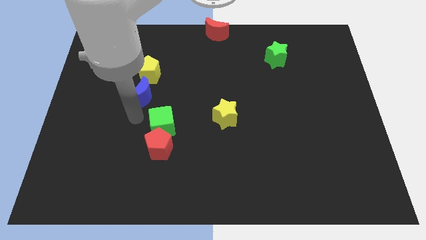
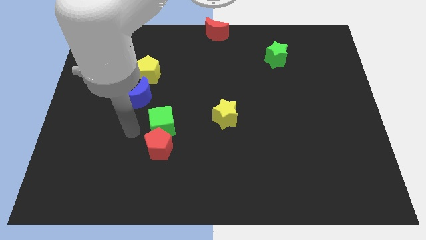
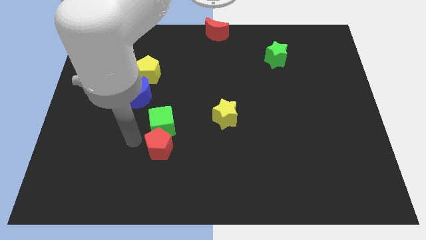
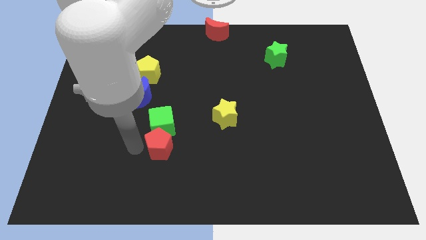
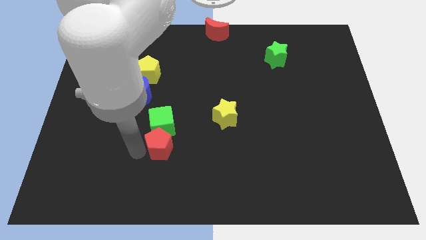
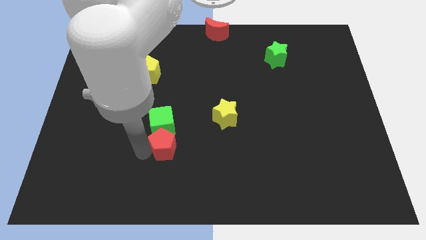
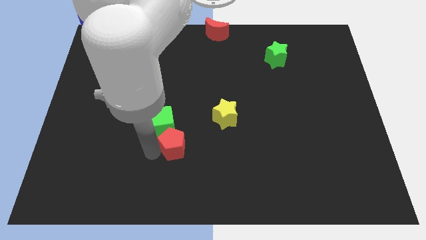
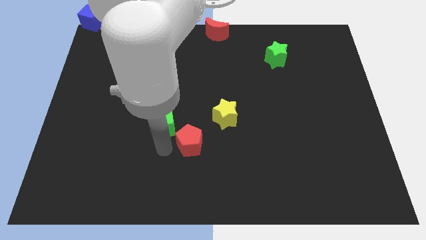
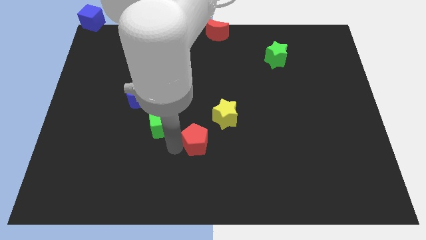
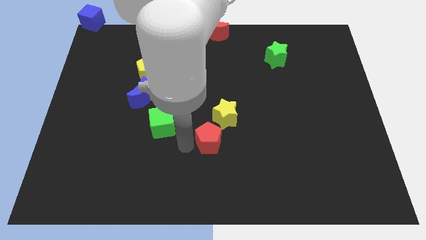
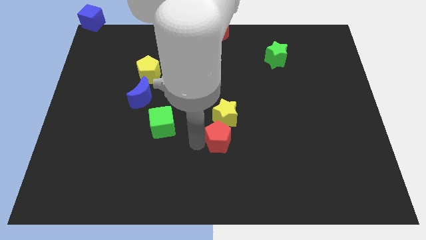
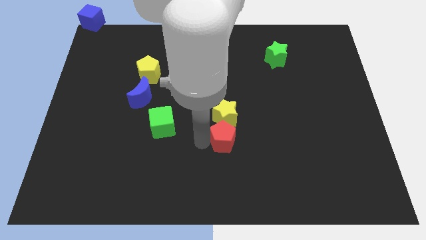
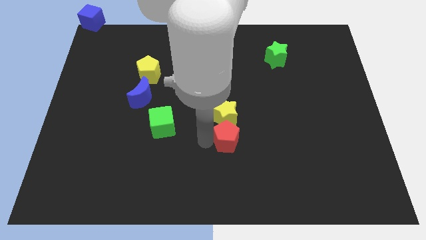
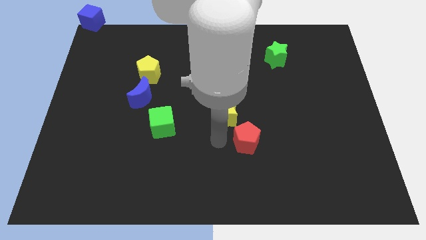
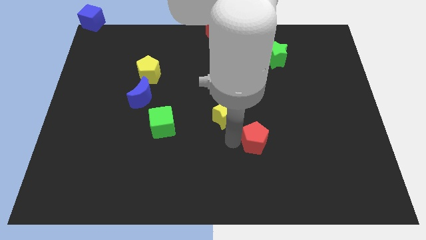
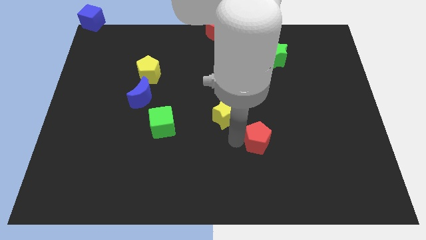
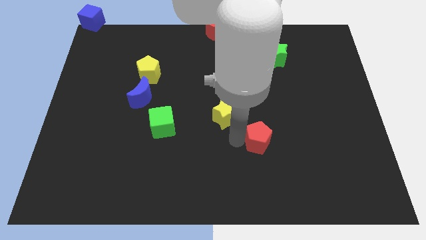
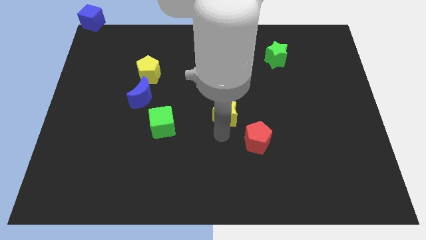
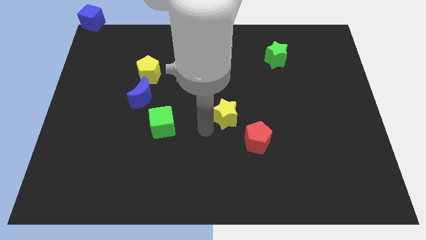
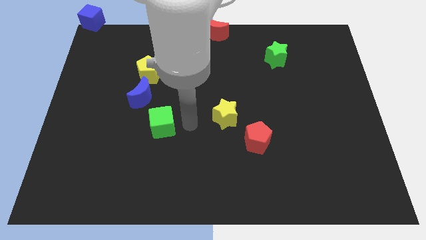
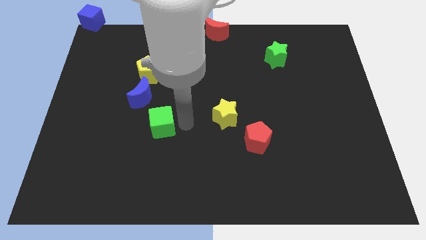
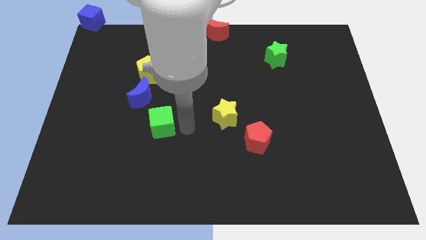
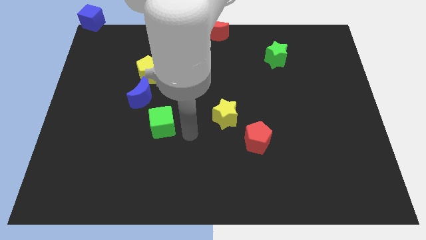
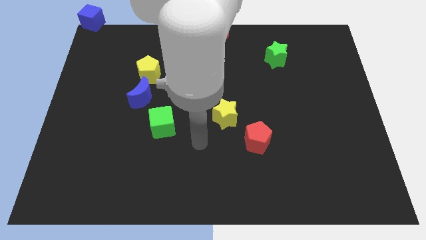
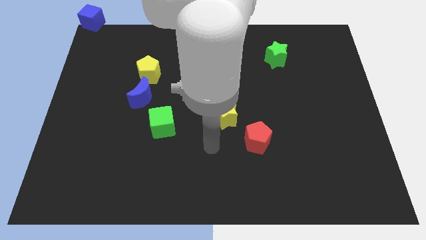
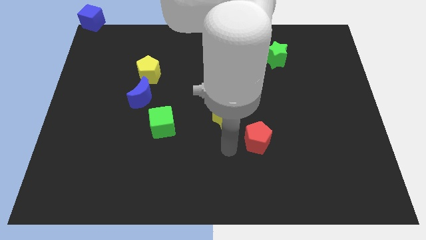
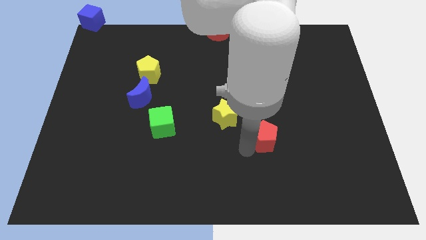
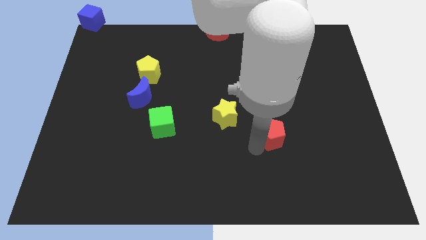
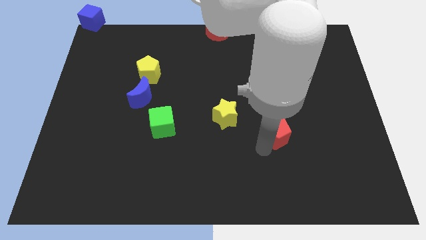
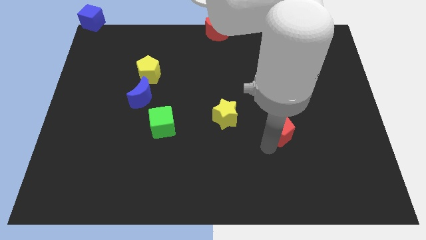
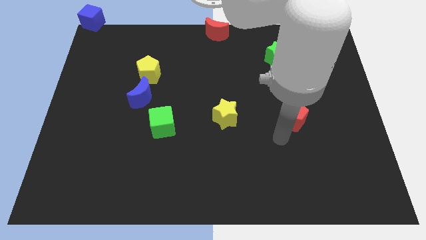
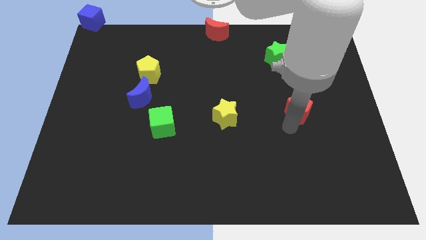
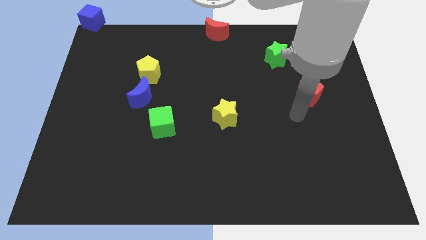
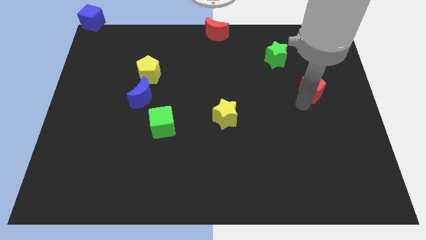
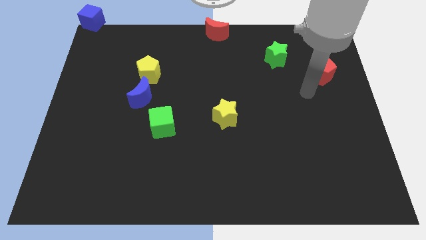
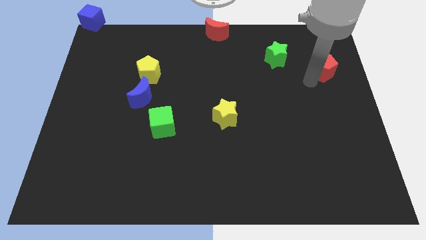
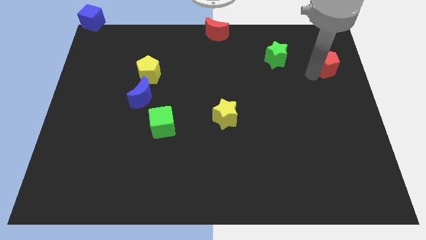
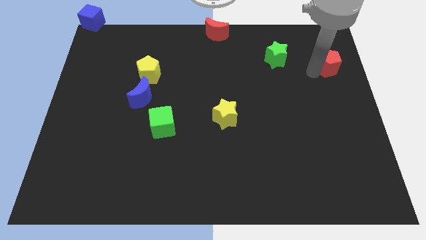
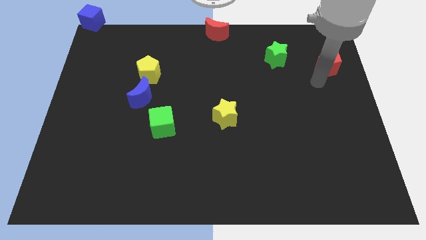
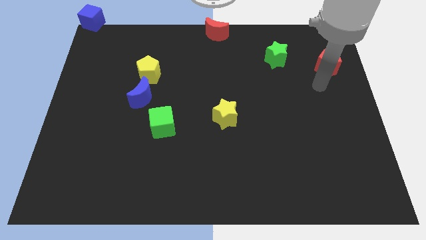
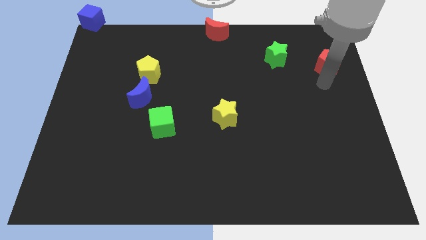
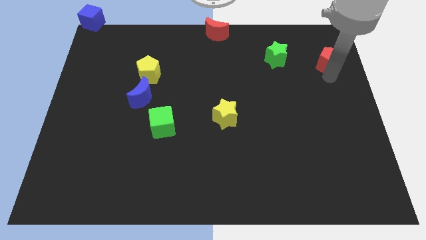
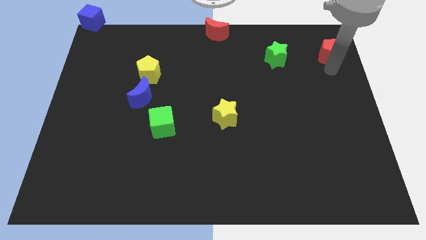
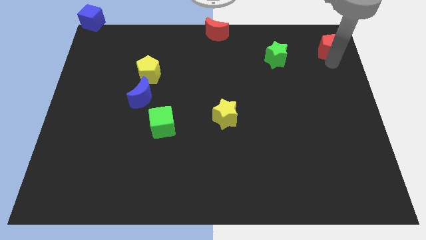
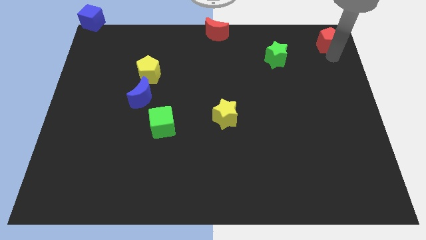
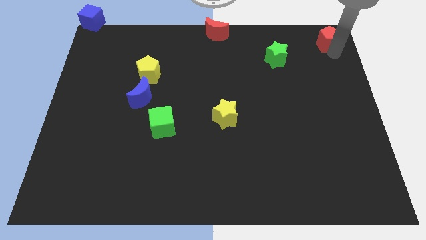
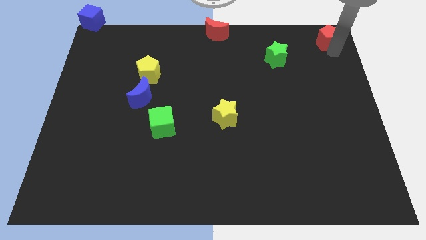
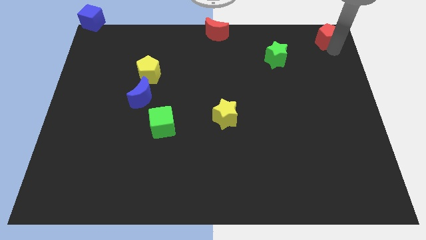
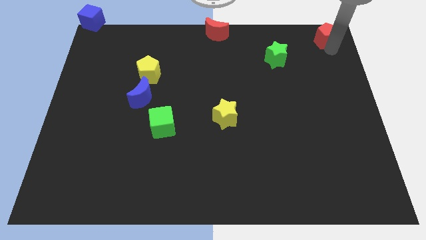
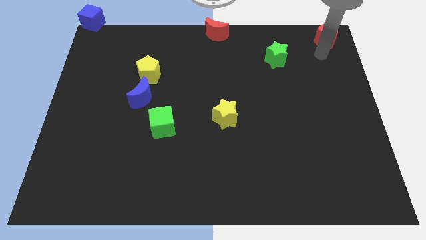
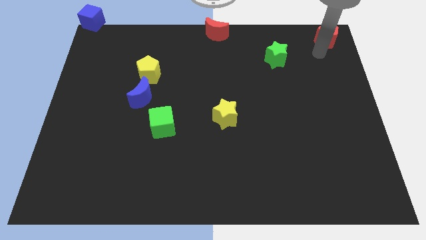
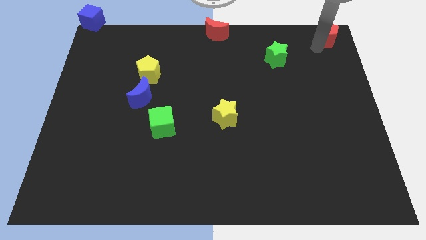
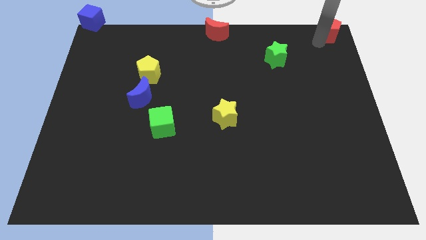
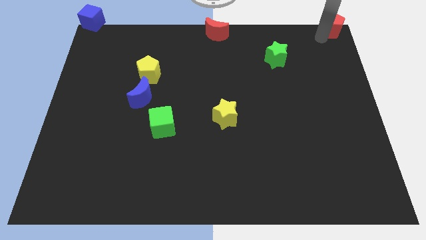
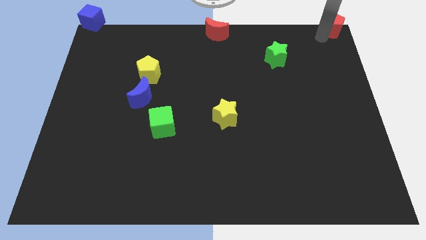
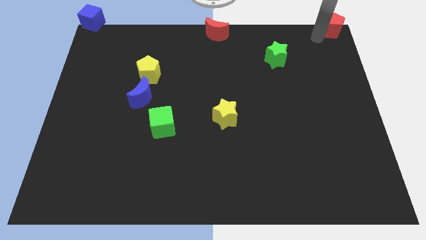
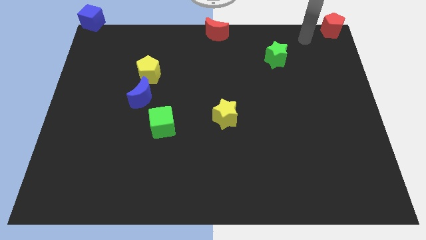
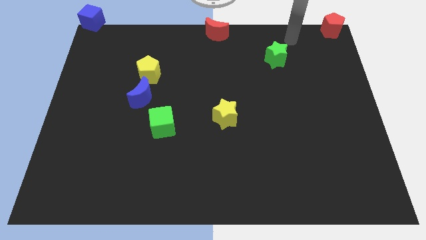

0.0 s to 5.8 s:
push the red pentagon to the top right corner of the board

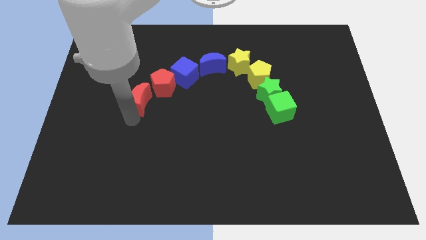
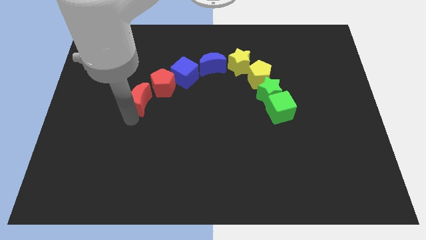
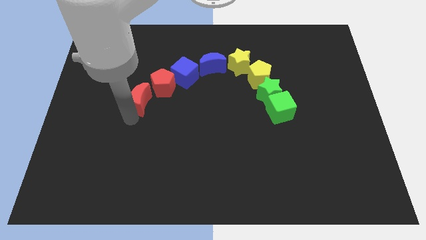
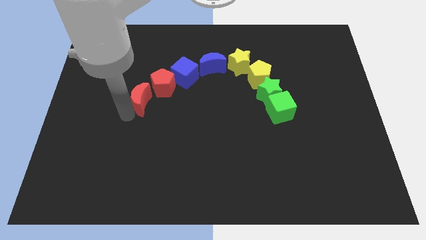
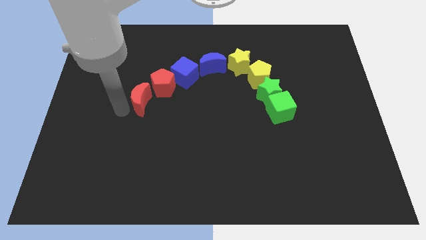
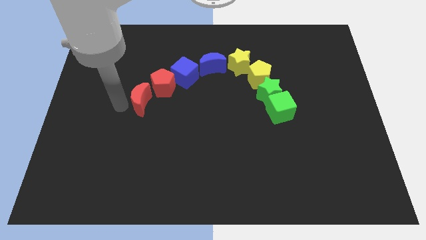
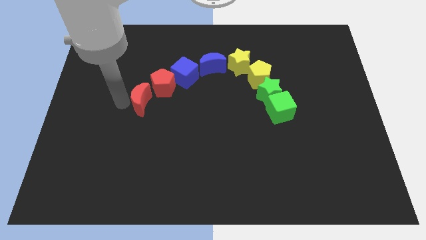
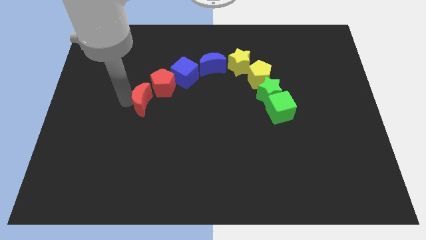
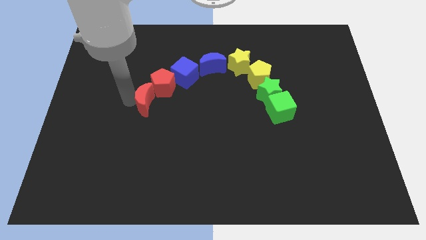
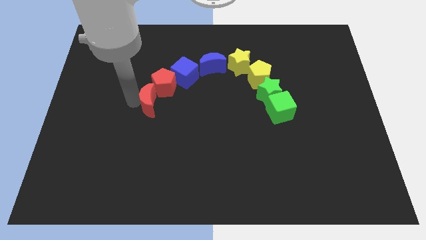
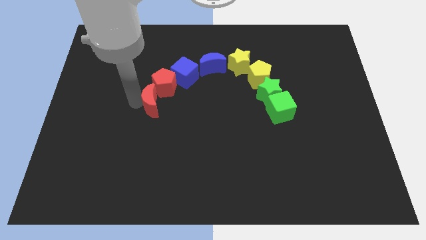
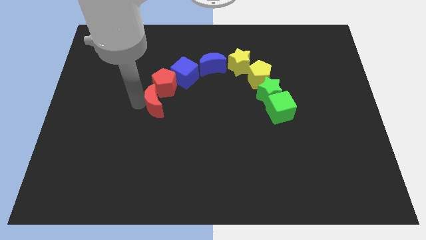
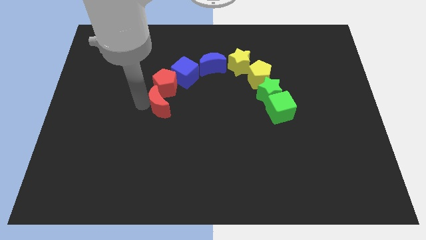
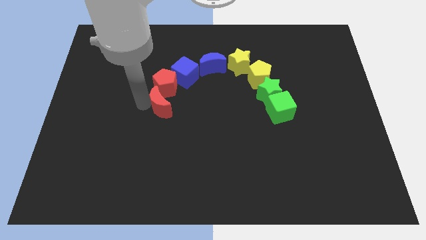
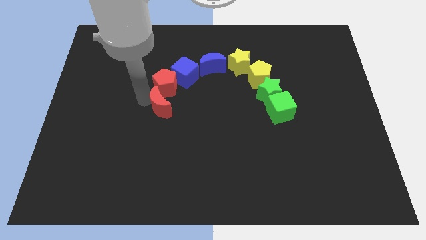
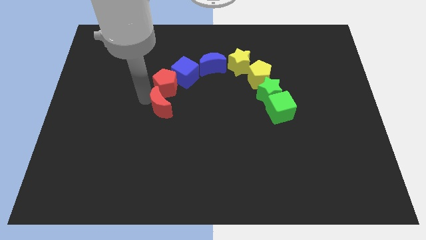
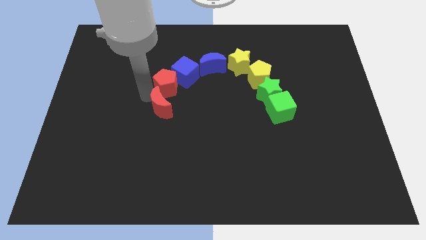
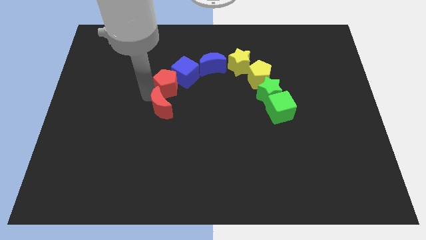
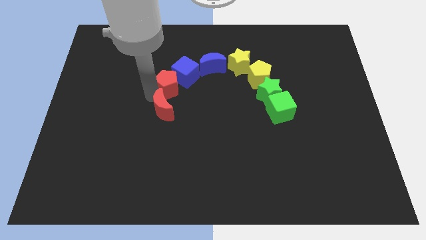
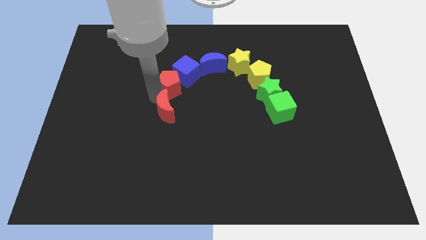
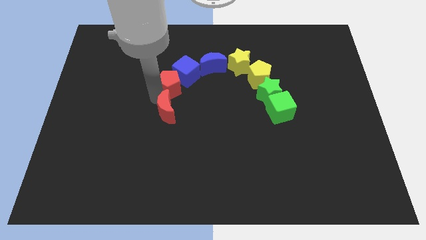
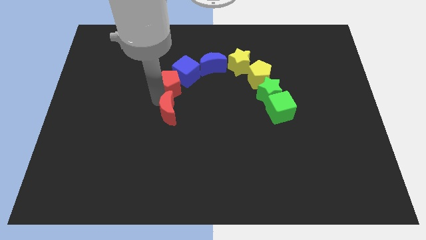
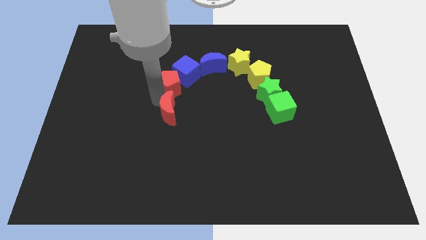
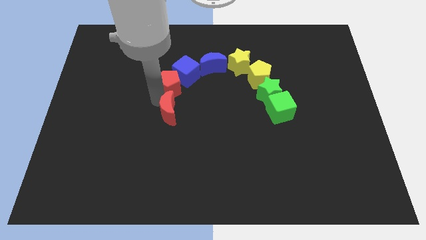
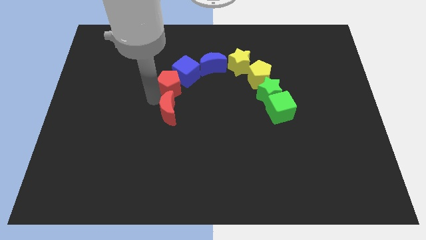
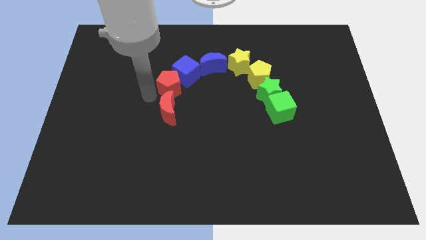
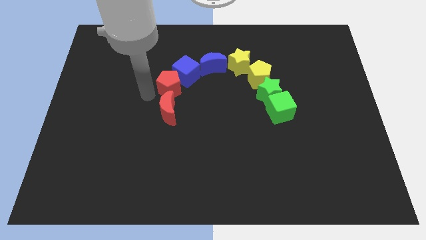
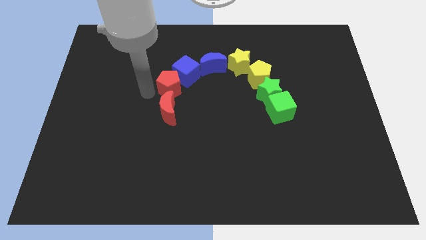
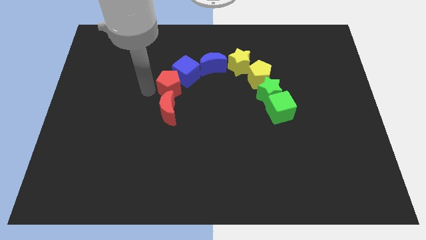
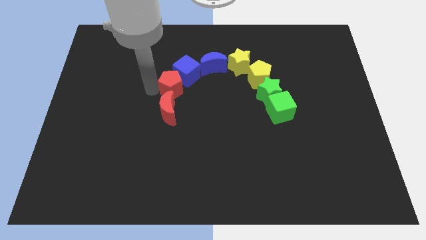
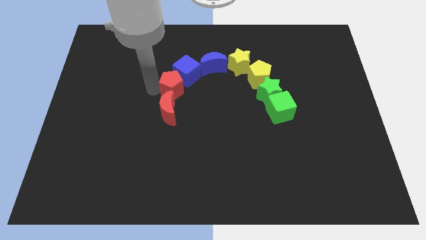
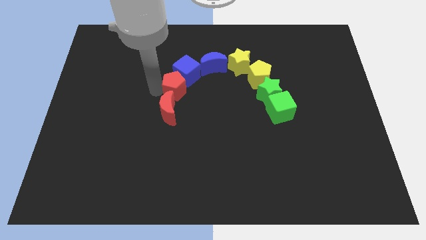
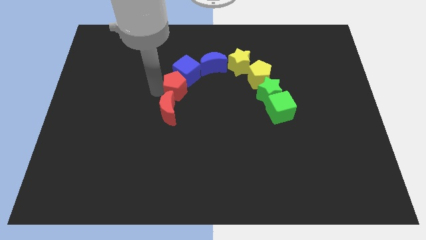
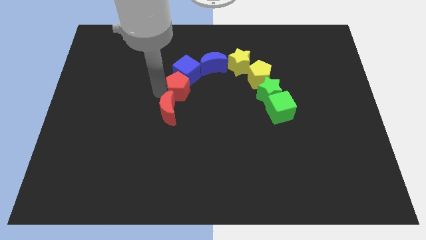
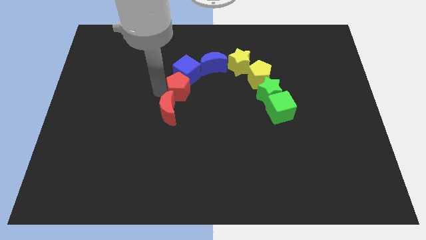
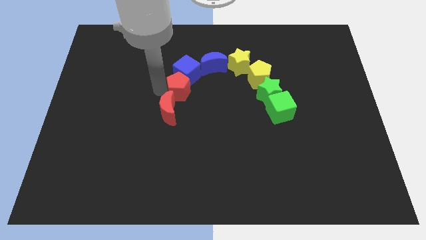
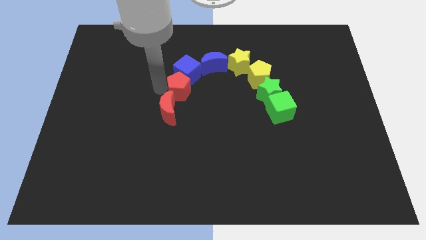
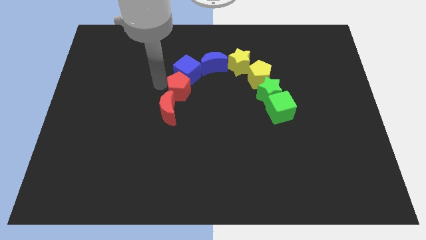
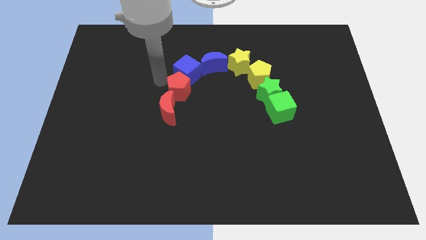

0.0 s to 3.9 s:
adjust the red moon and red penatgon
